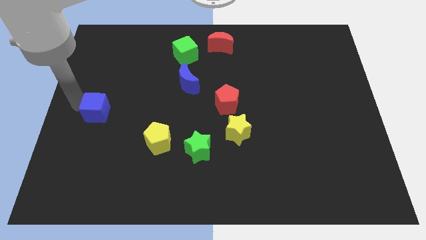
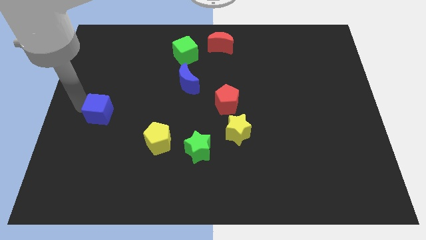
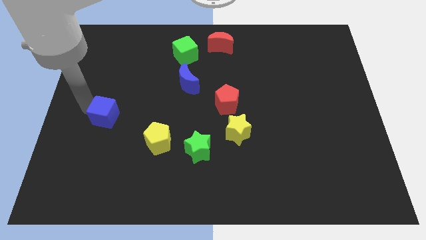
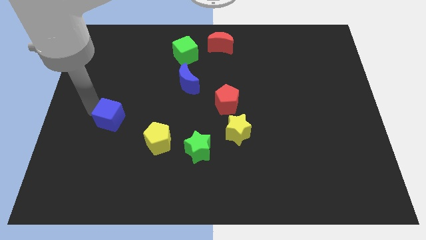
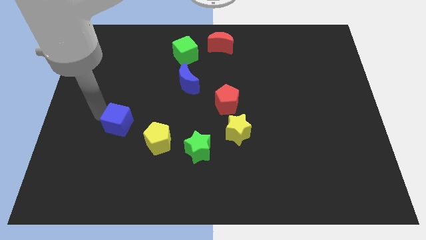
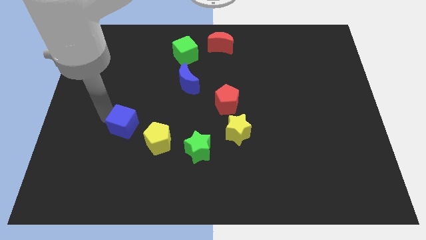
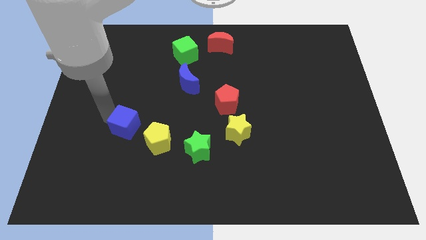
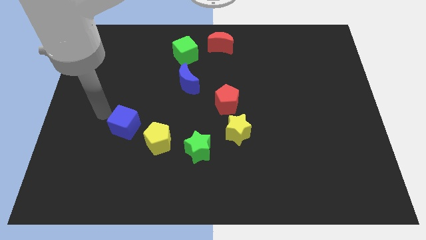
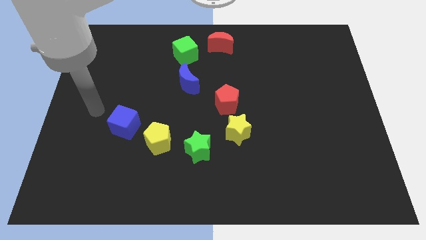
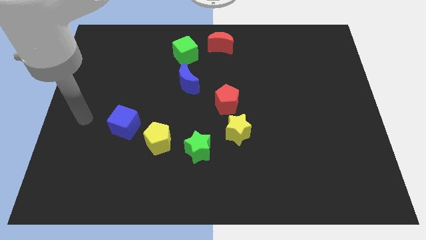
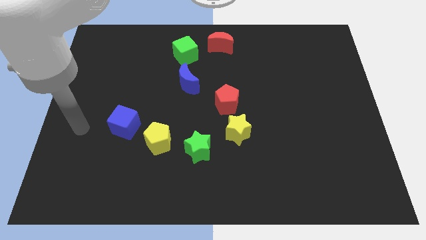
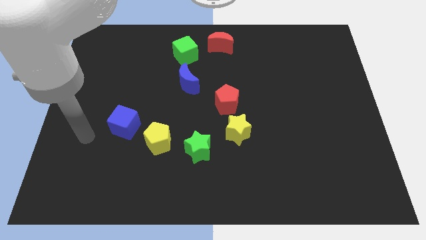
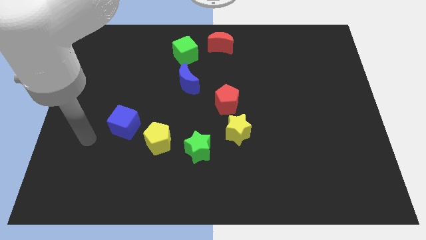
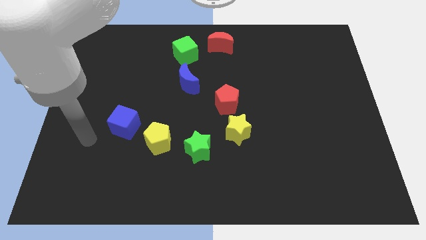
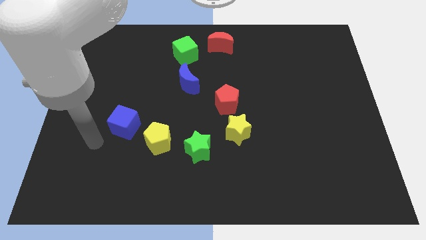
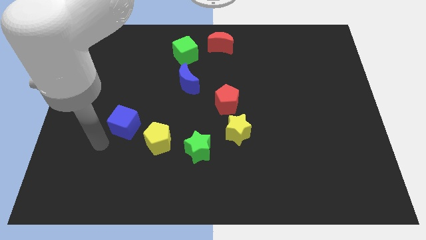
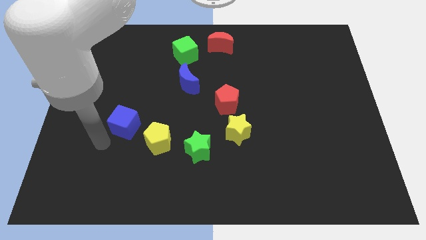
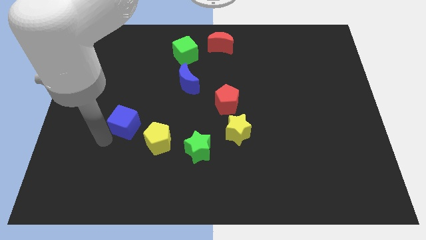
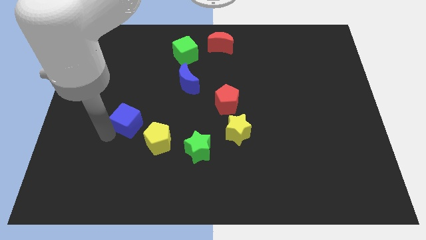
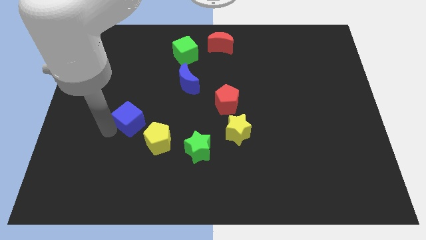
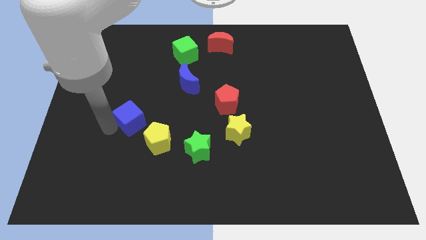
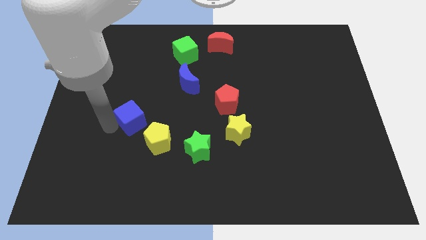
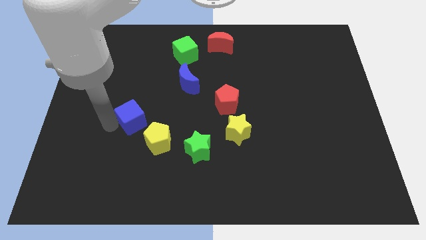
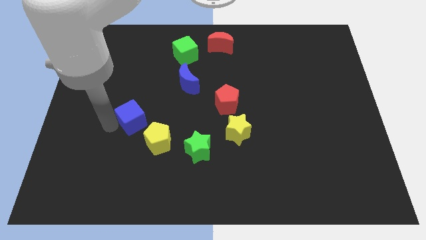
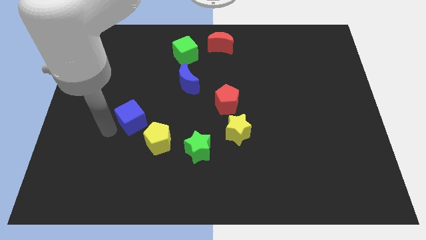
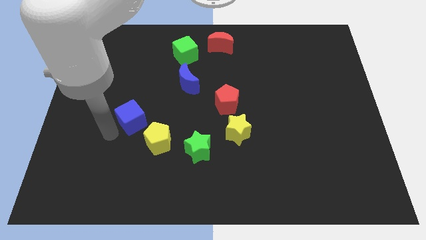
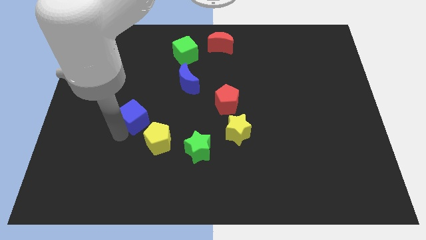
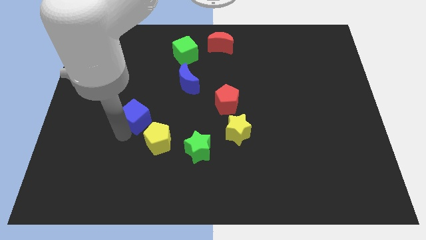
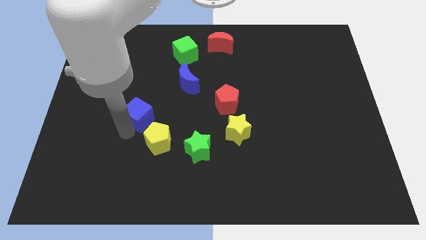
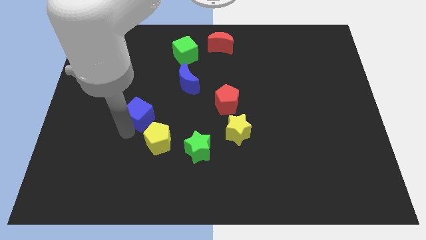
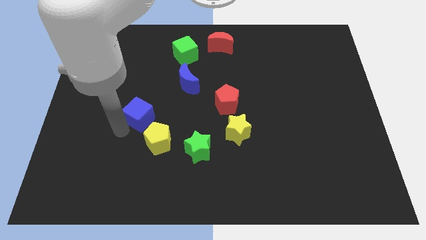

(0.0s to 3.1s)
push the blue cube on top left of the yellow pentagon

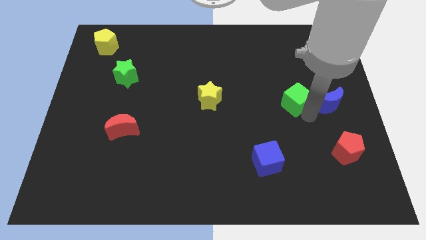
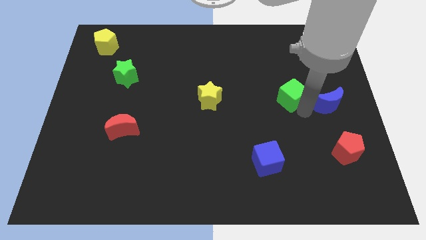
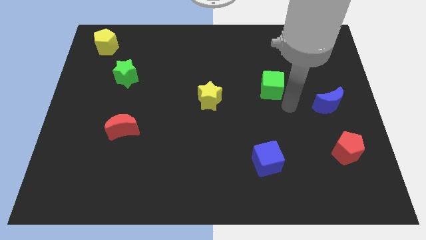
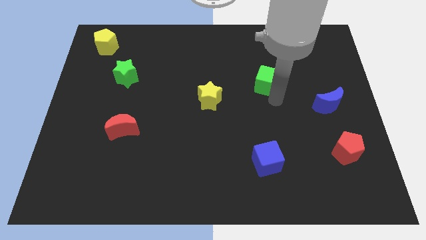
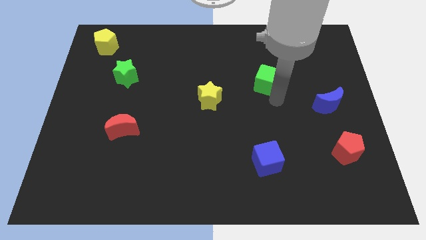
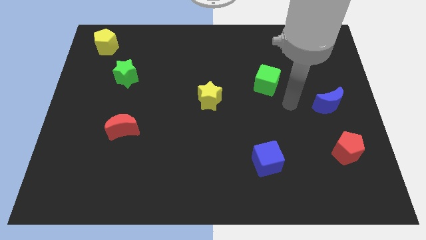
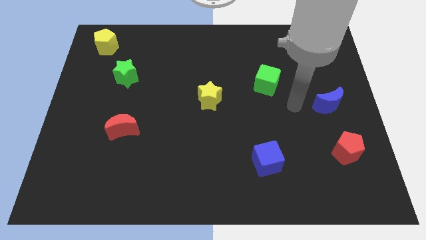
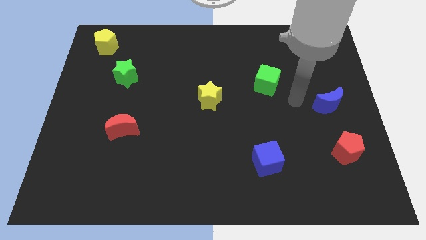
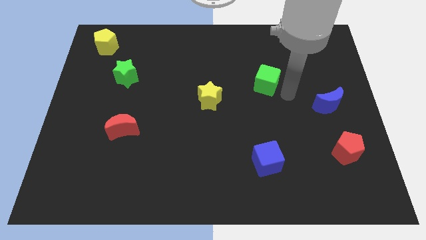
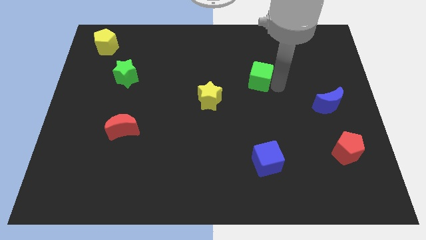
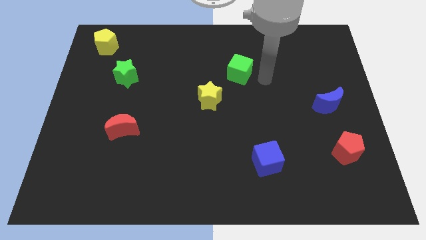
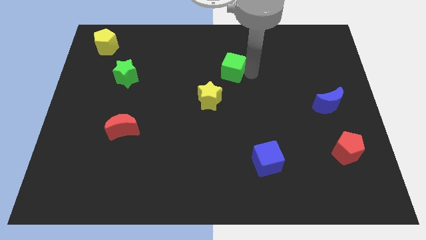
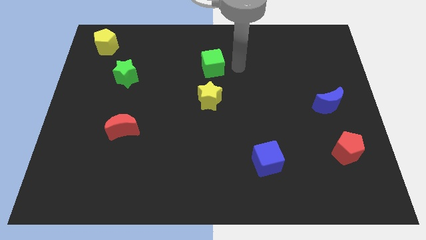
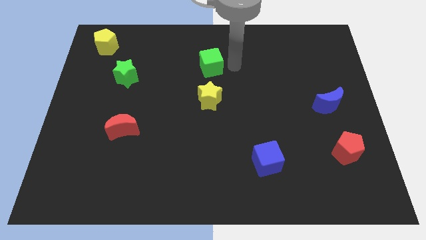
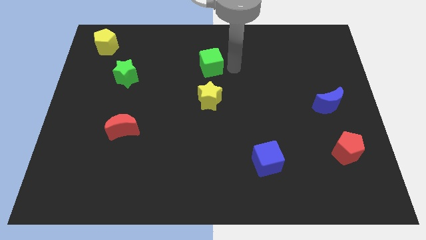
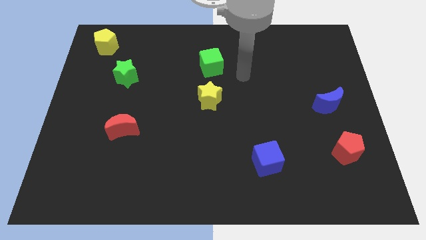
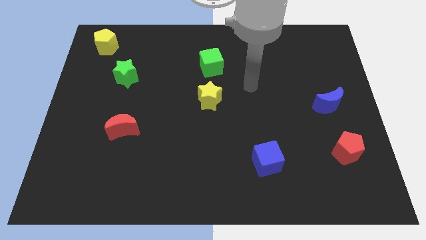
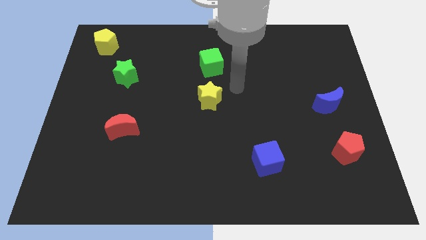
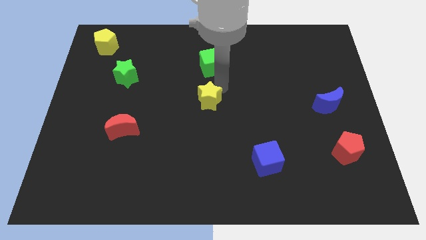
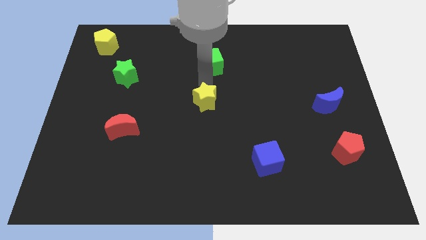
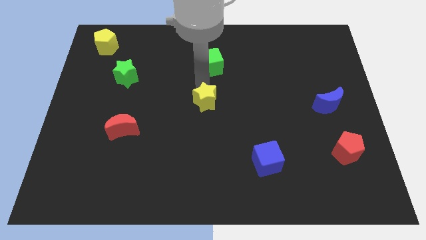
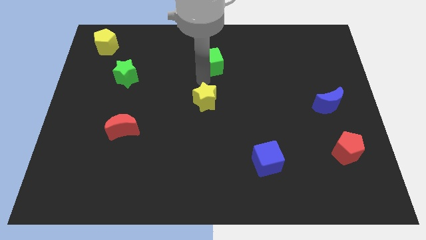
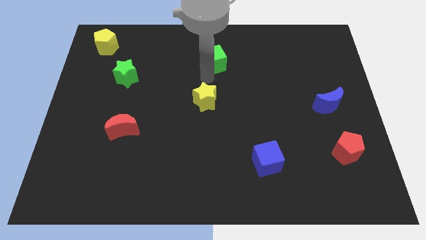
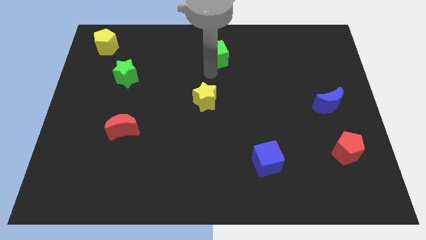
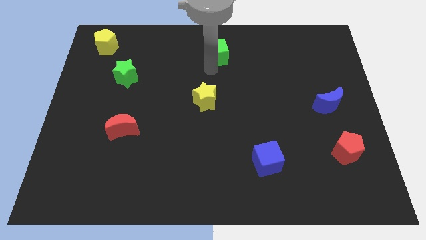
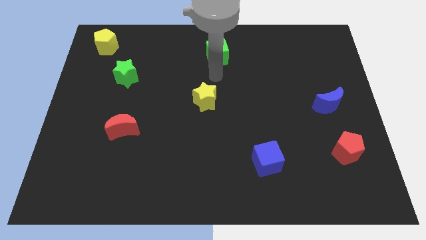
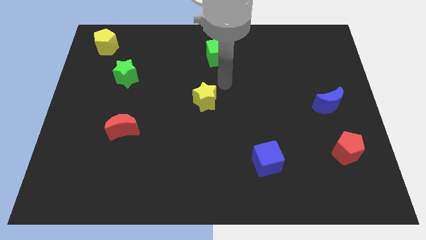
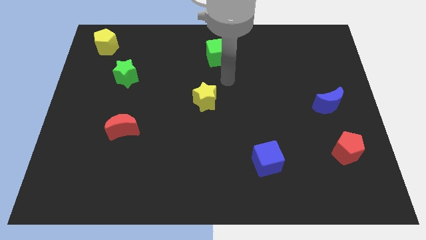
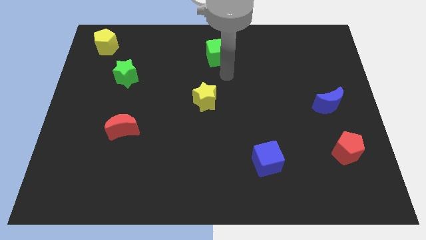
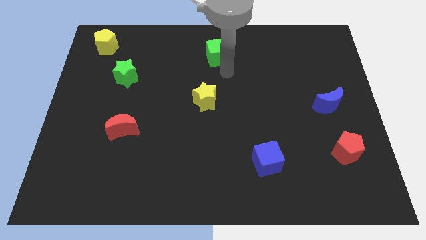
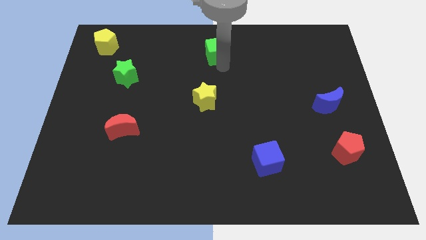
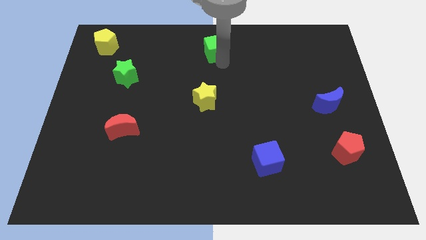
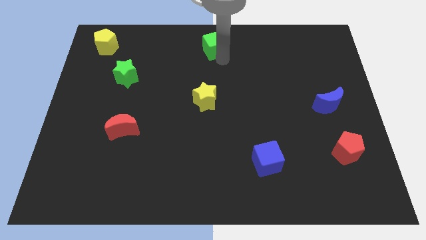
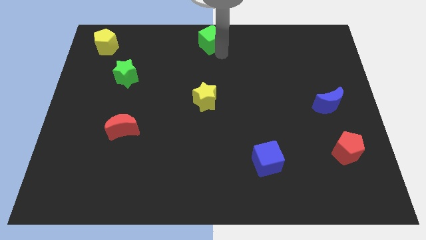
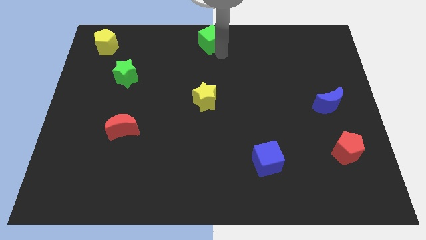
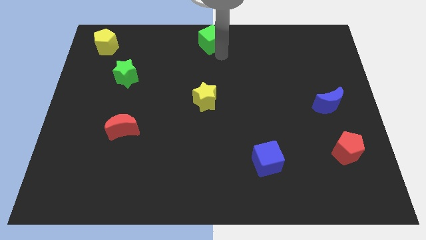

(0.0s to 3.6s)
move the green cube towards the top center of the board

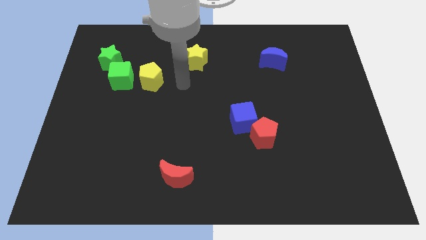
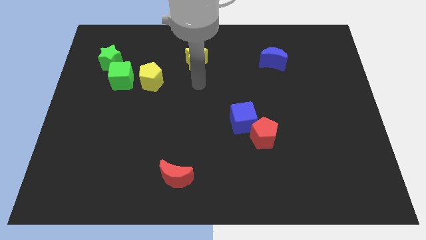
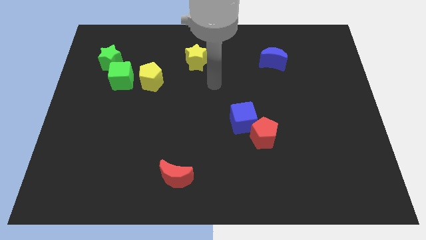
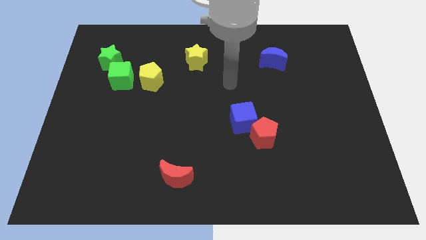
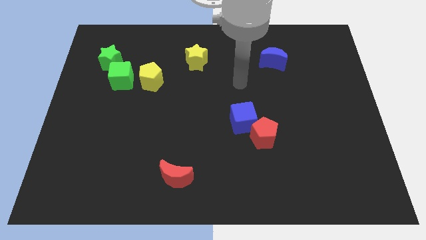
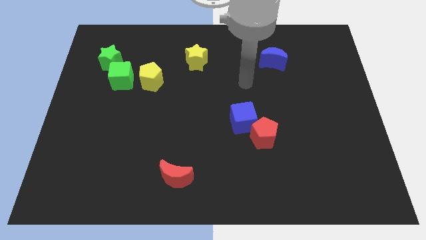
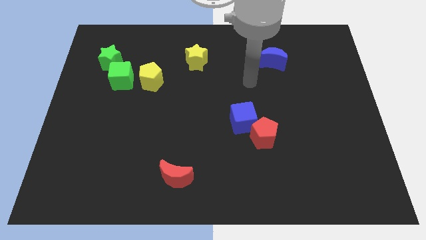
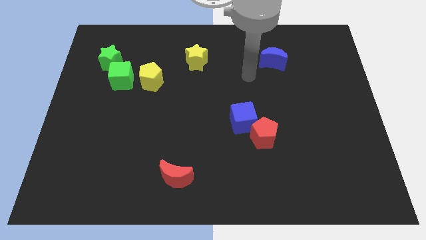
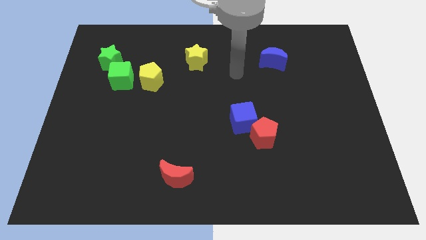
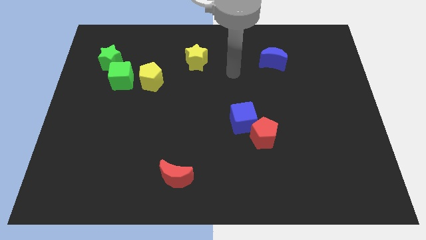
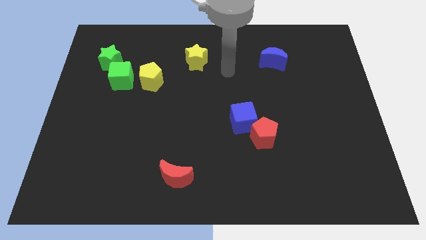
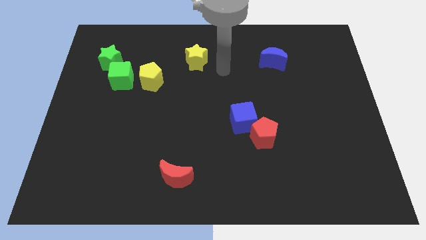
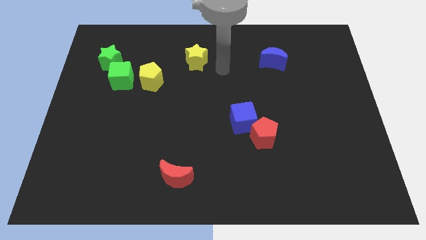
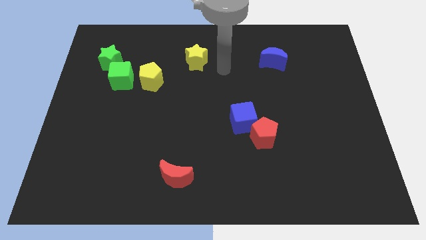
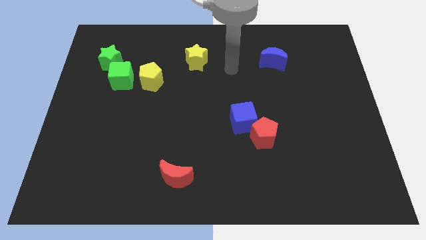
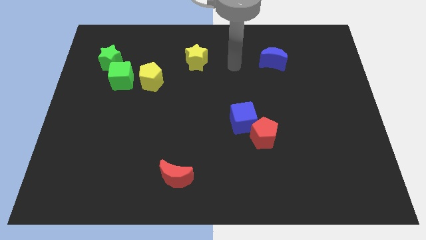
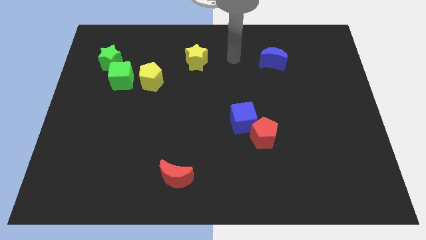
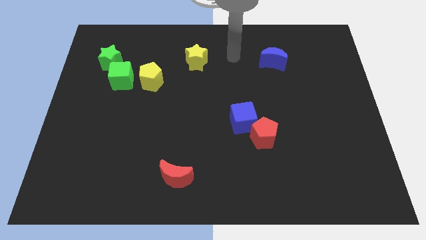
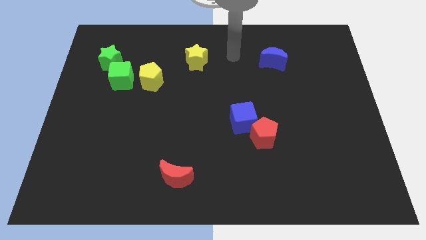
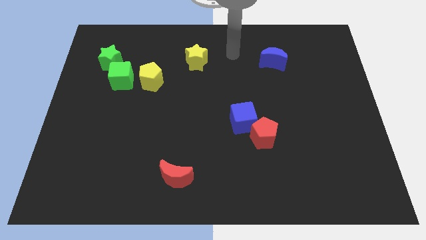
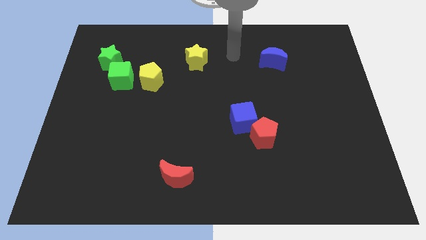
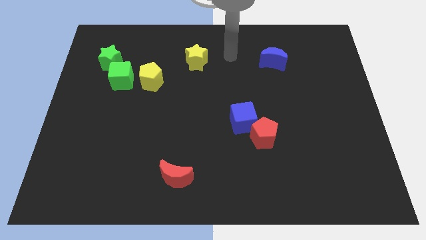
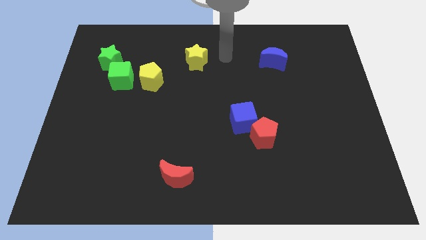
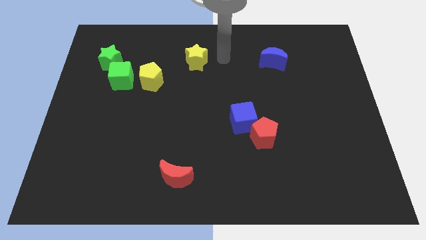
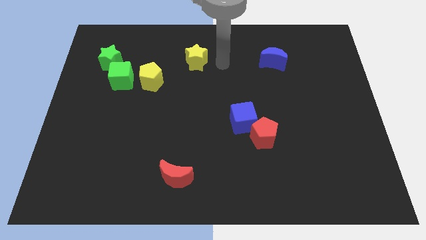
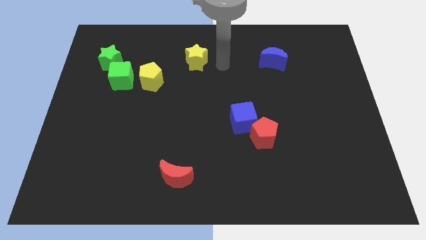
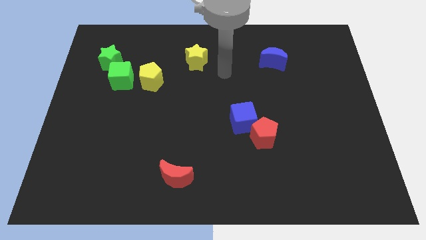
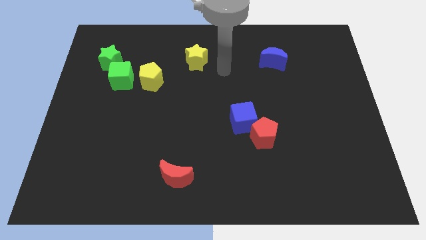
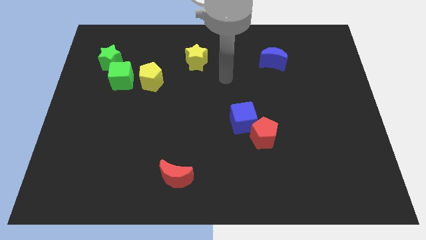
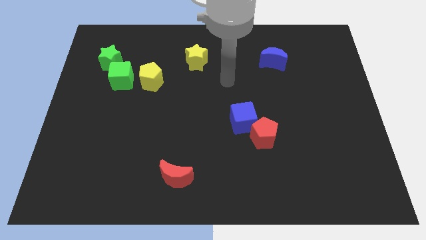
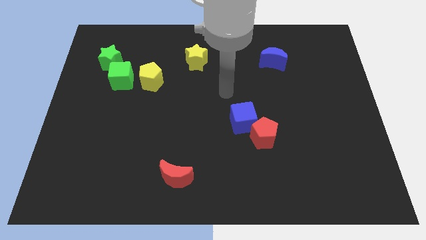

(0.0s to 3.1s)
move blue cube to the diagonal top left of red pentagon
